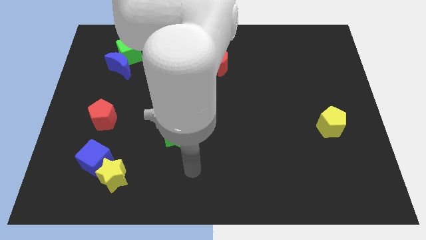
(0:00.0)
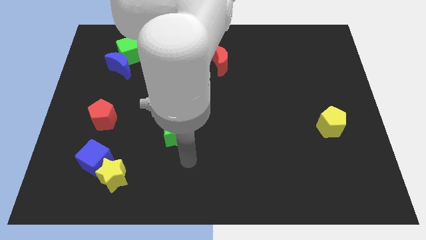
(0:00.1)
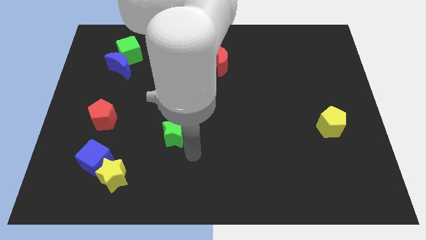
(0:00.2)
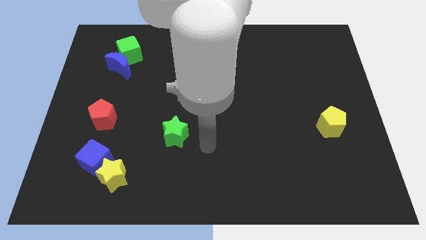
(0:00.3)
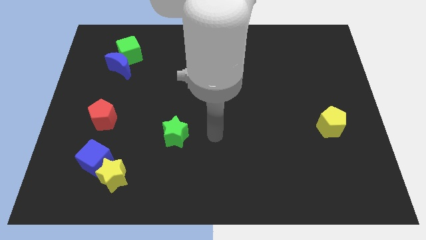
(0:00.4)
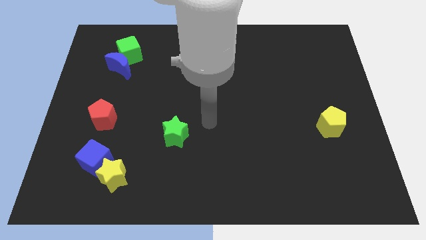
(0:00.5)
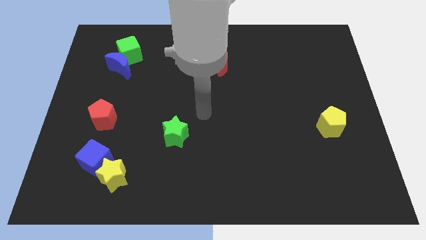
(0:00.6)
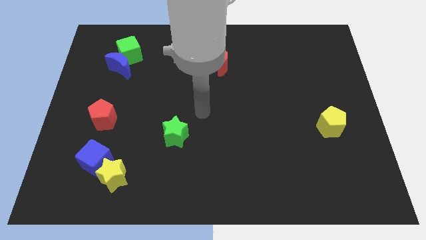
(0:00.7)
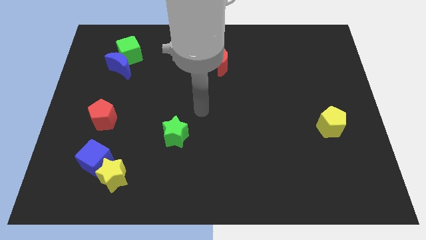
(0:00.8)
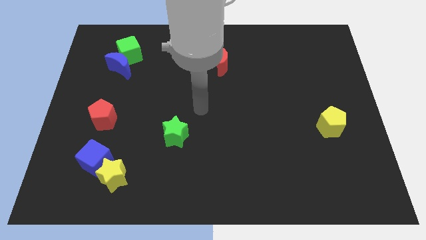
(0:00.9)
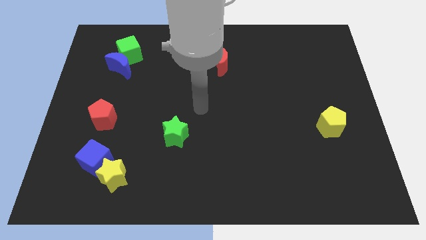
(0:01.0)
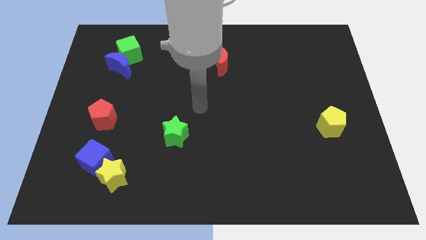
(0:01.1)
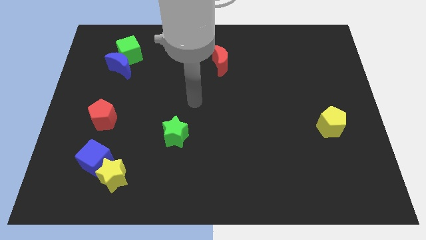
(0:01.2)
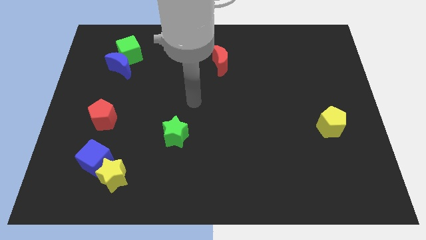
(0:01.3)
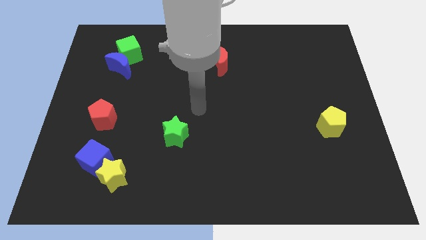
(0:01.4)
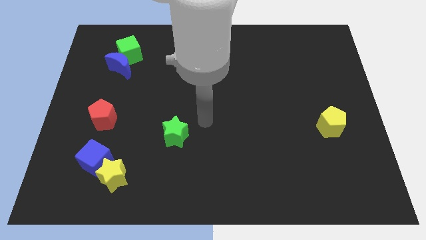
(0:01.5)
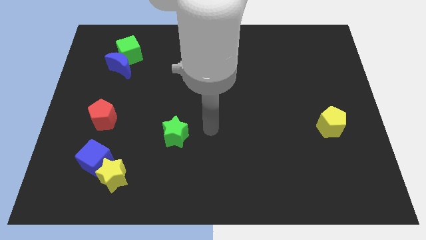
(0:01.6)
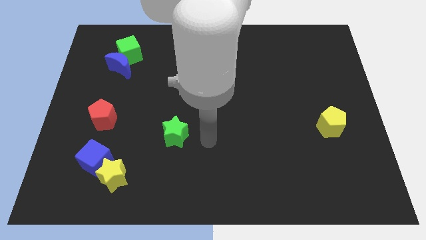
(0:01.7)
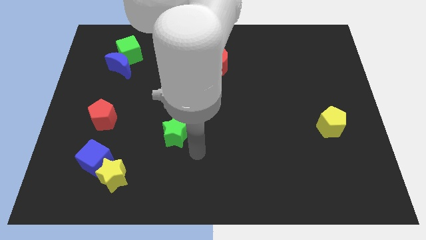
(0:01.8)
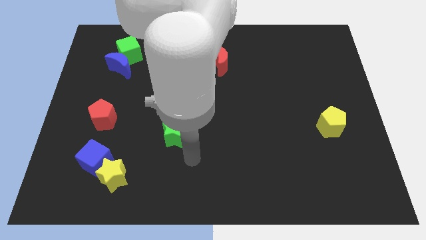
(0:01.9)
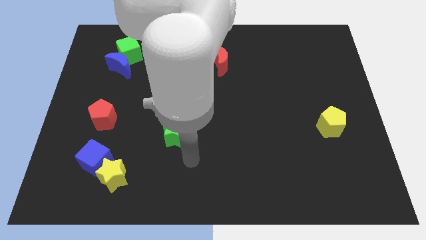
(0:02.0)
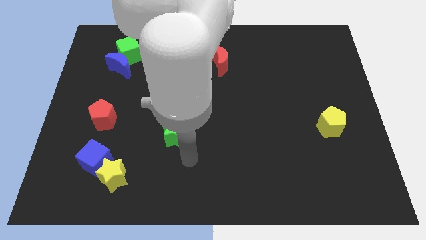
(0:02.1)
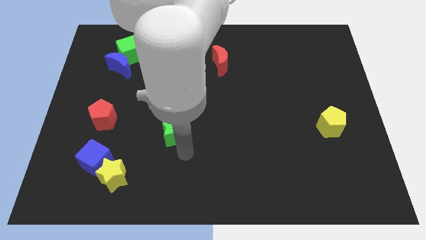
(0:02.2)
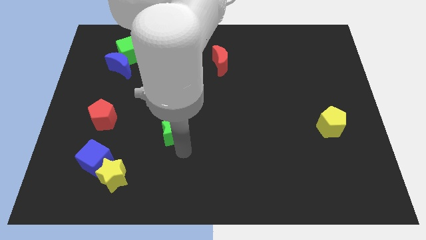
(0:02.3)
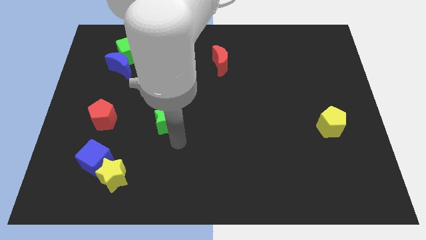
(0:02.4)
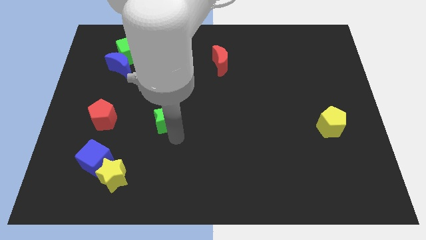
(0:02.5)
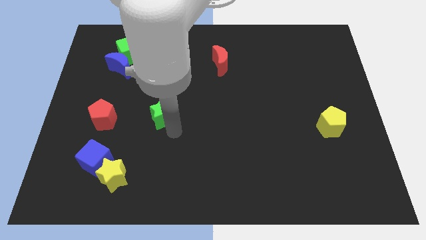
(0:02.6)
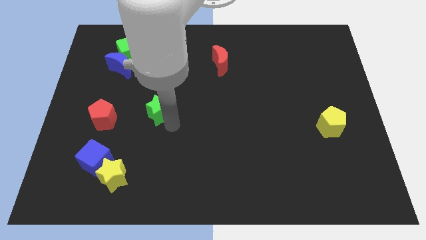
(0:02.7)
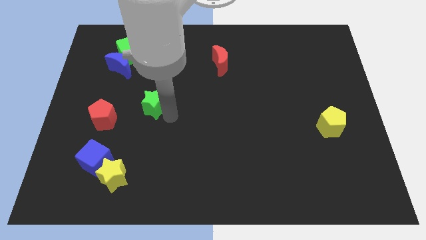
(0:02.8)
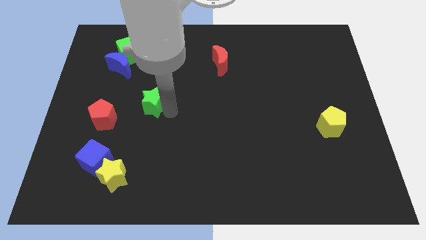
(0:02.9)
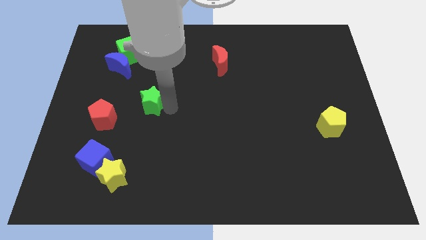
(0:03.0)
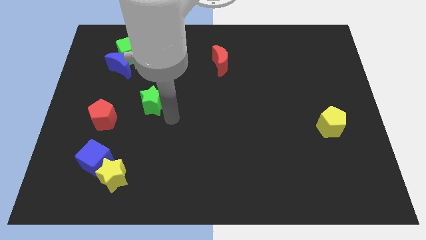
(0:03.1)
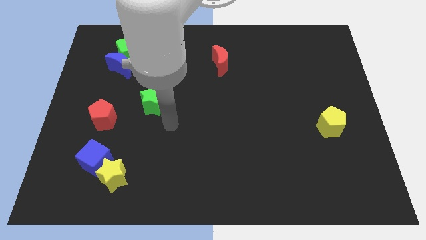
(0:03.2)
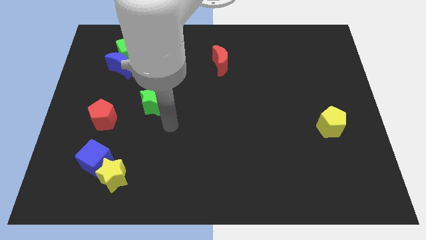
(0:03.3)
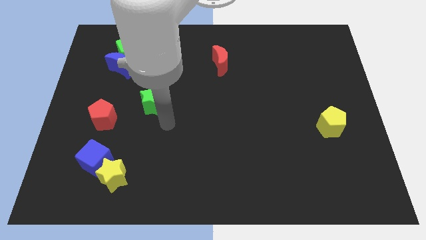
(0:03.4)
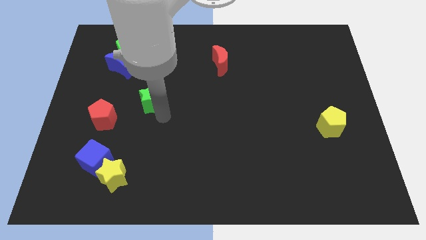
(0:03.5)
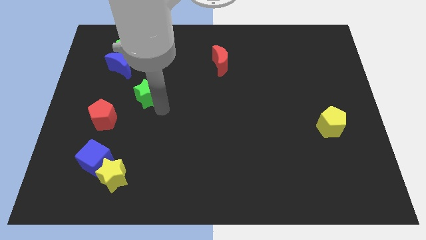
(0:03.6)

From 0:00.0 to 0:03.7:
place the green star to the top right of the red pentagon

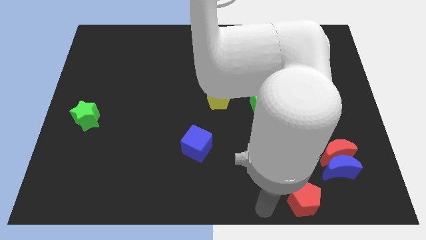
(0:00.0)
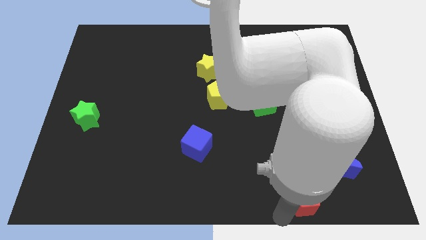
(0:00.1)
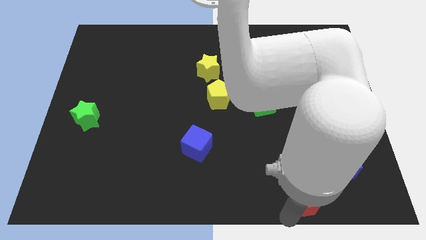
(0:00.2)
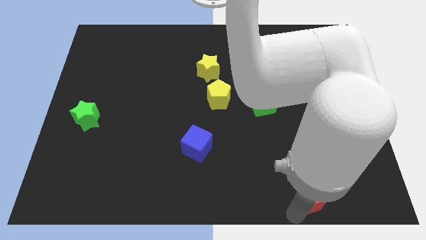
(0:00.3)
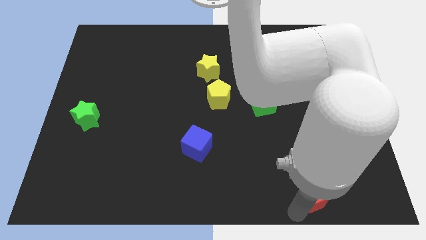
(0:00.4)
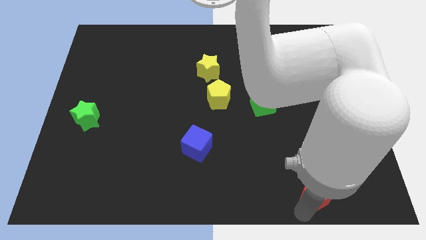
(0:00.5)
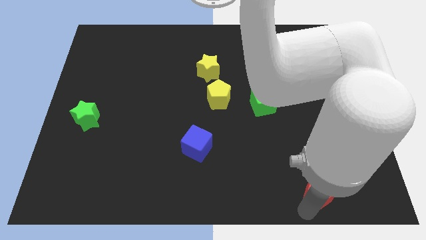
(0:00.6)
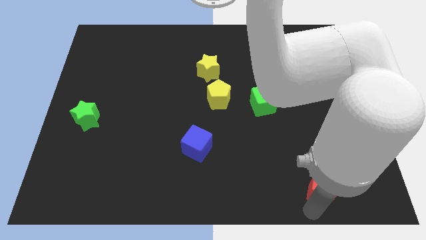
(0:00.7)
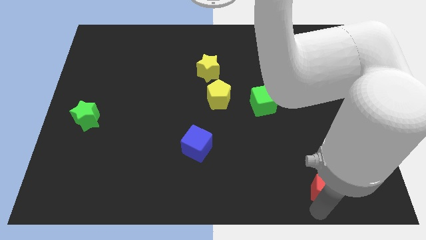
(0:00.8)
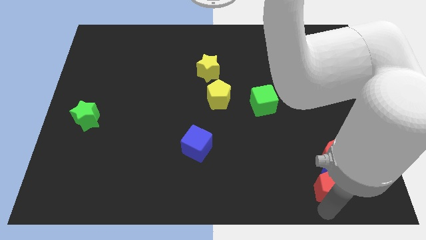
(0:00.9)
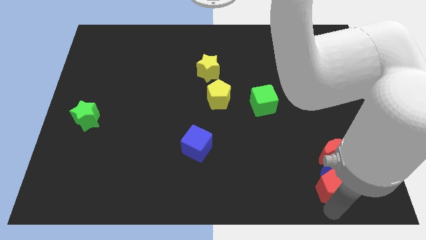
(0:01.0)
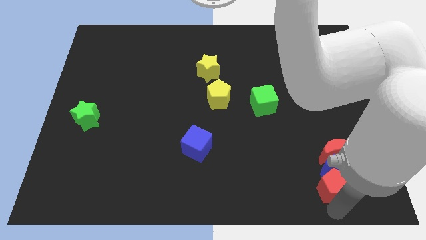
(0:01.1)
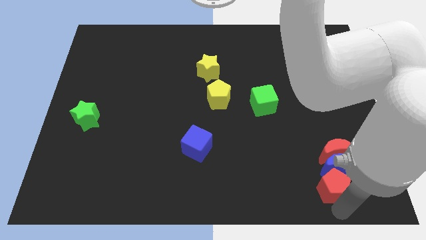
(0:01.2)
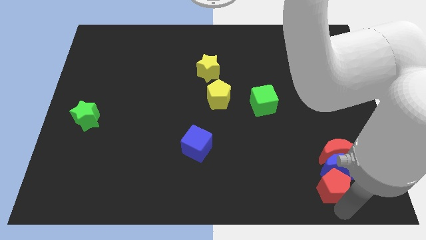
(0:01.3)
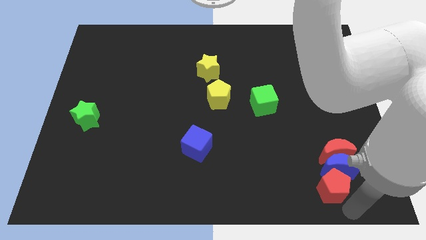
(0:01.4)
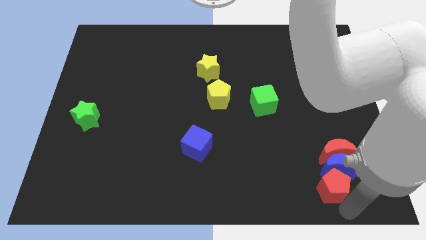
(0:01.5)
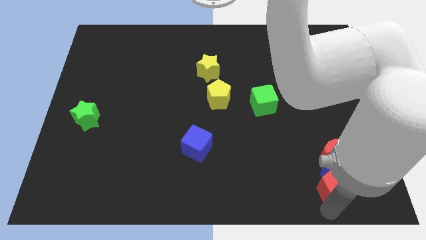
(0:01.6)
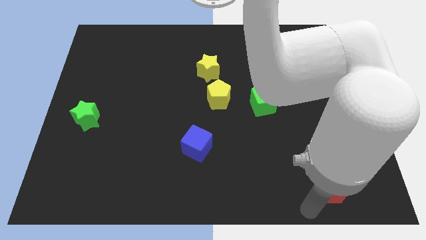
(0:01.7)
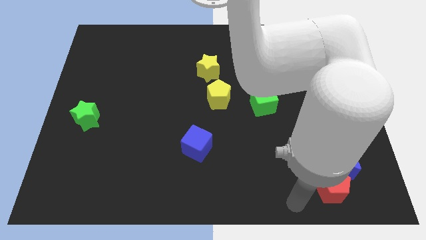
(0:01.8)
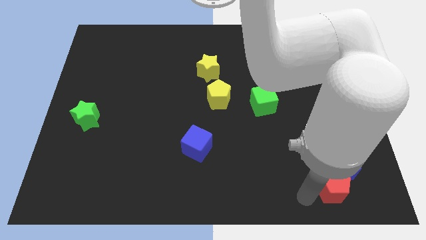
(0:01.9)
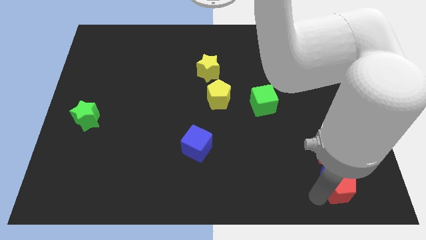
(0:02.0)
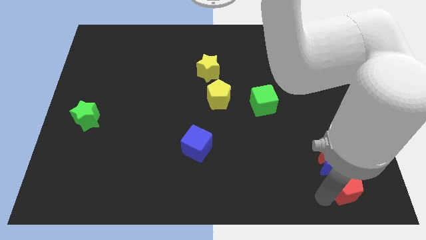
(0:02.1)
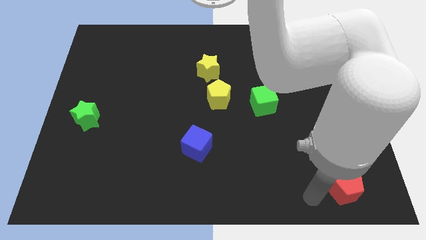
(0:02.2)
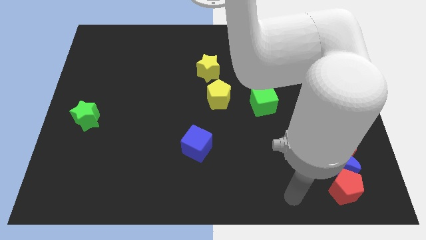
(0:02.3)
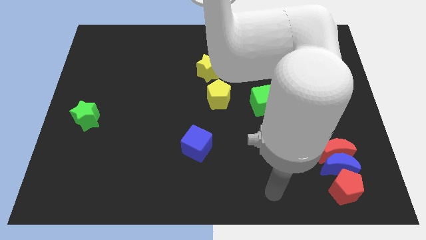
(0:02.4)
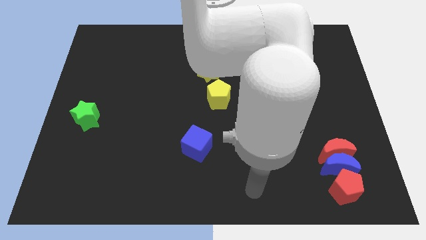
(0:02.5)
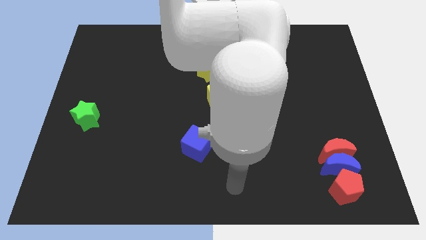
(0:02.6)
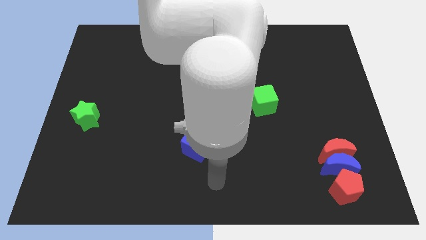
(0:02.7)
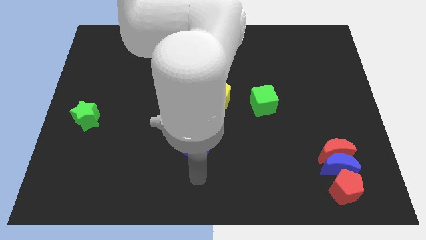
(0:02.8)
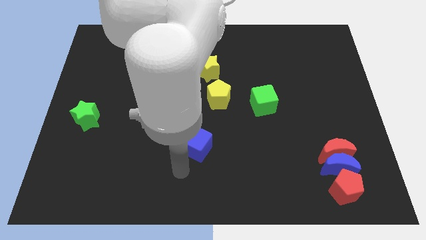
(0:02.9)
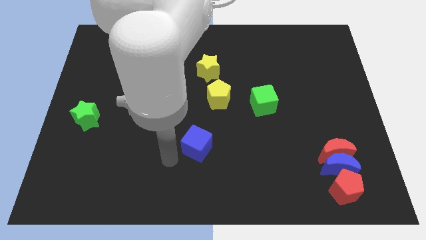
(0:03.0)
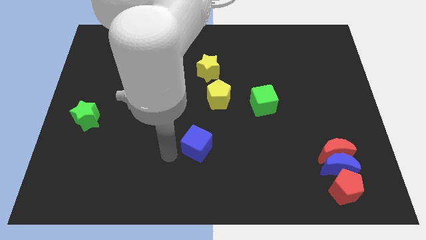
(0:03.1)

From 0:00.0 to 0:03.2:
move your arm away from the red pentagon

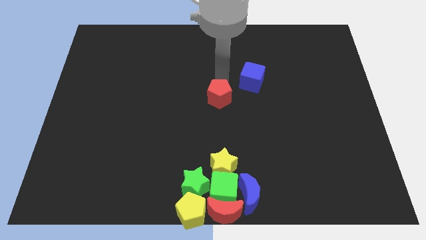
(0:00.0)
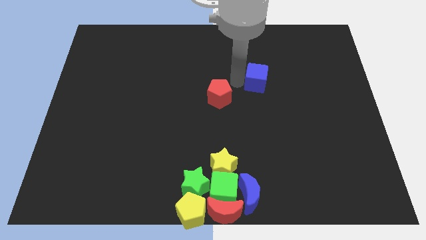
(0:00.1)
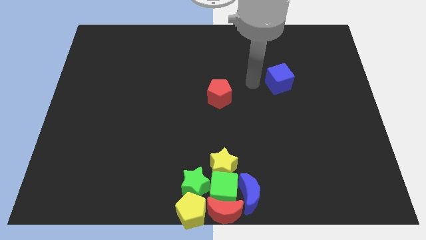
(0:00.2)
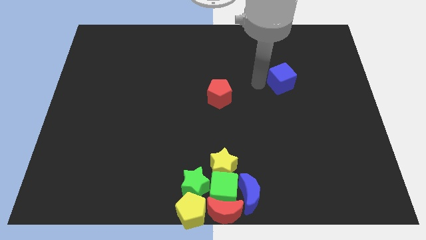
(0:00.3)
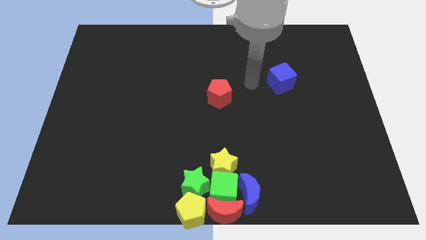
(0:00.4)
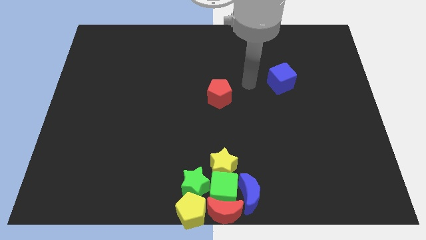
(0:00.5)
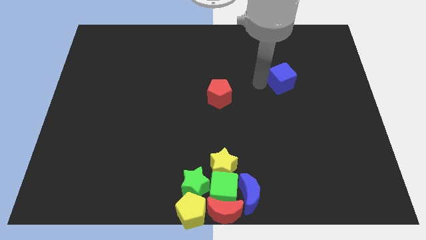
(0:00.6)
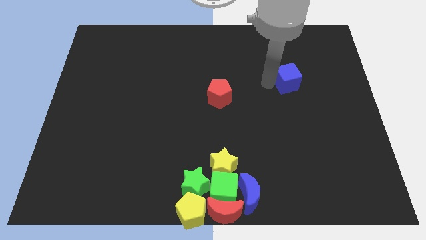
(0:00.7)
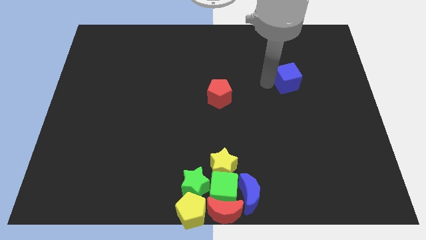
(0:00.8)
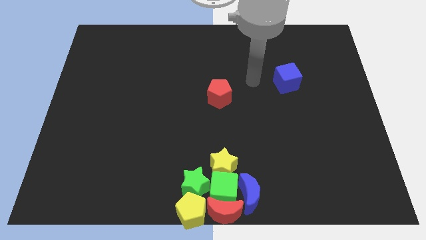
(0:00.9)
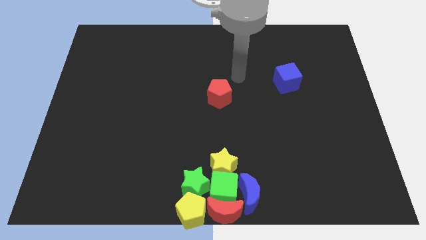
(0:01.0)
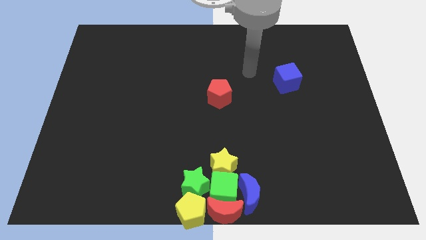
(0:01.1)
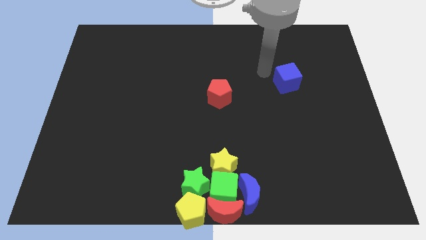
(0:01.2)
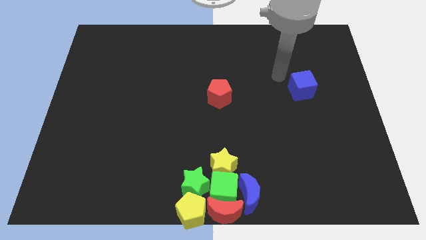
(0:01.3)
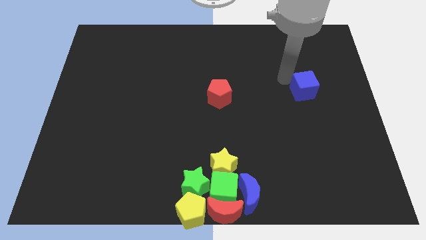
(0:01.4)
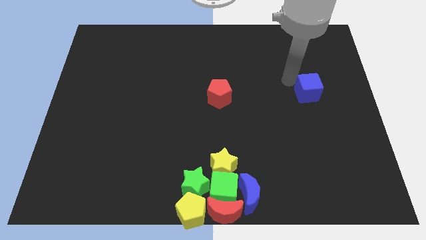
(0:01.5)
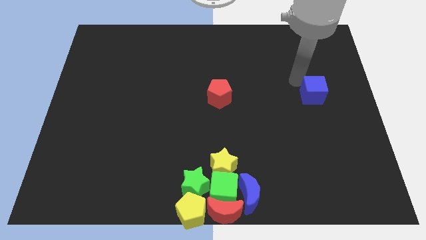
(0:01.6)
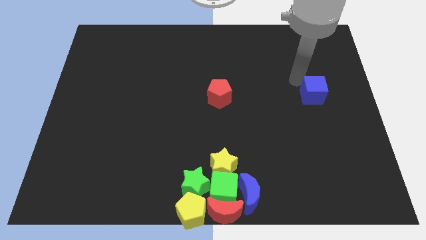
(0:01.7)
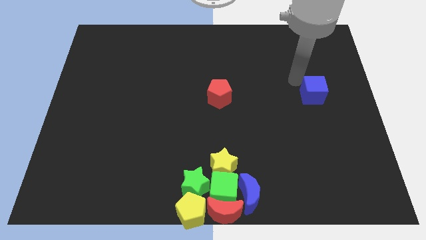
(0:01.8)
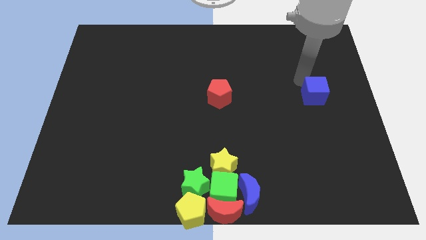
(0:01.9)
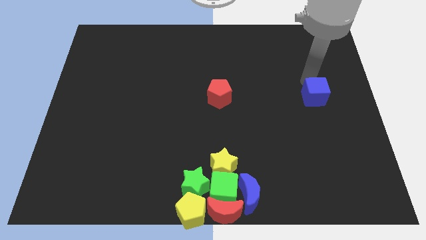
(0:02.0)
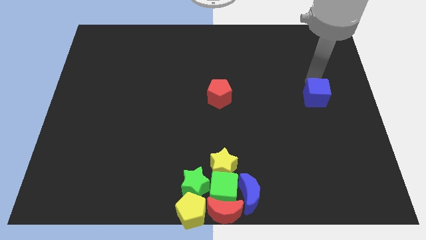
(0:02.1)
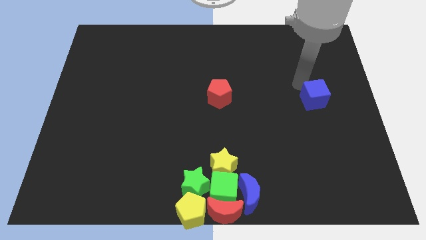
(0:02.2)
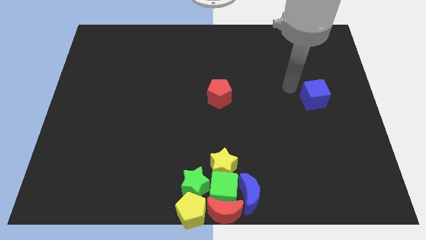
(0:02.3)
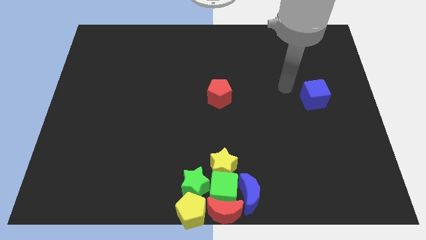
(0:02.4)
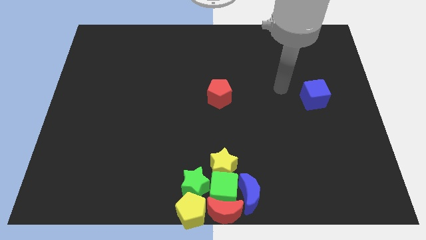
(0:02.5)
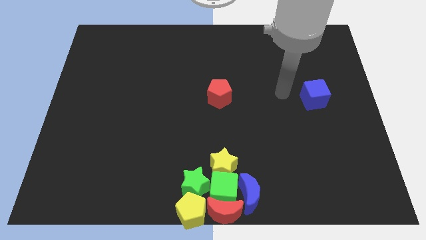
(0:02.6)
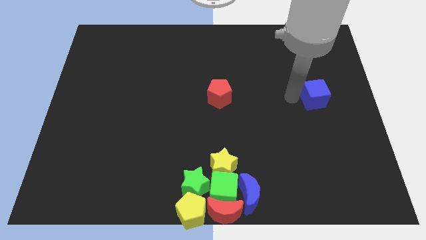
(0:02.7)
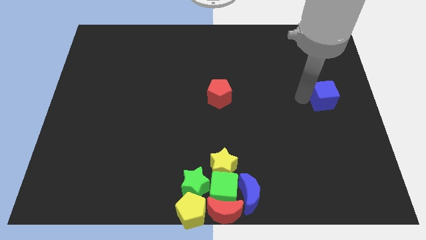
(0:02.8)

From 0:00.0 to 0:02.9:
place the blue cube to the right of the red pentagon
